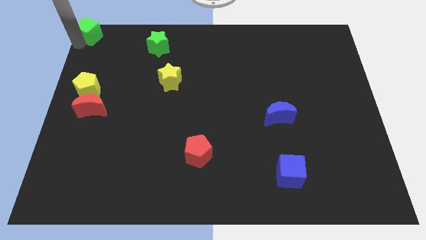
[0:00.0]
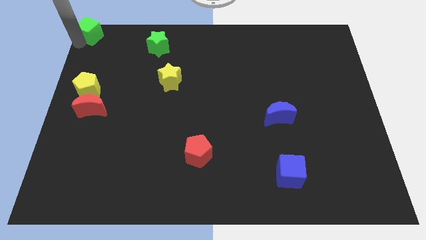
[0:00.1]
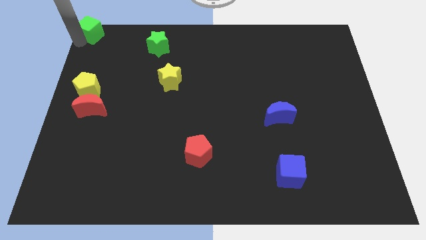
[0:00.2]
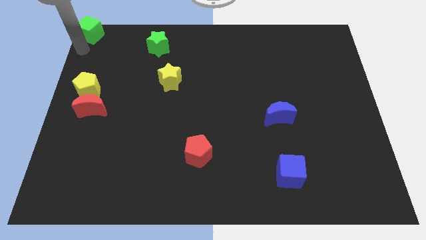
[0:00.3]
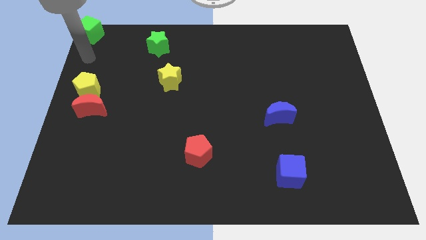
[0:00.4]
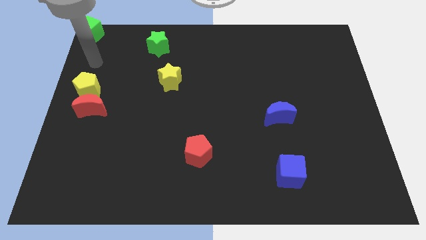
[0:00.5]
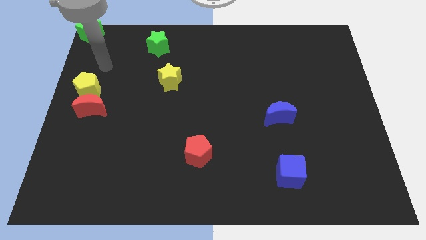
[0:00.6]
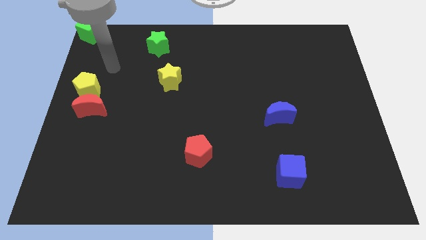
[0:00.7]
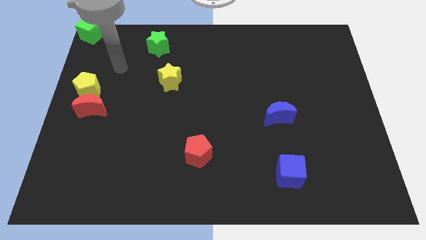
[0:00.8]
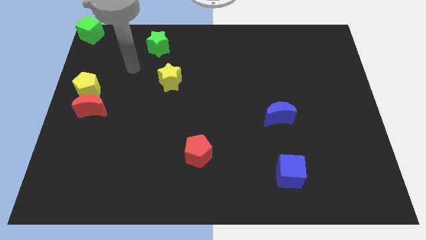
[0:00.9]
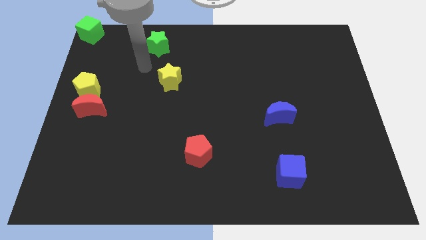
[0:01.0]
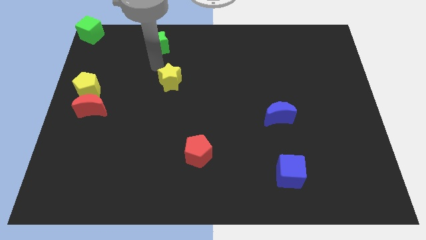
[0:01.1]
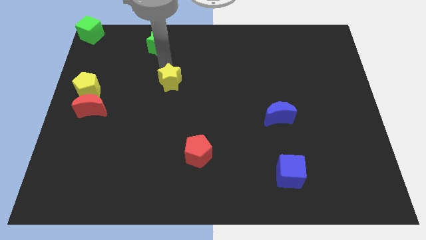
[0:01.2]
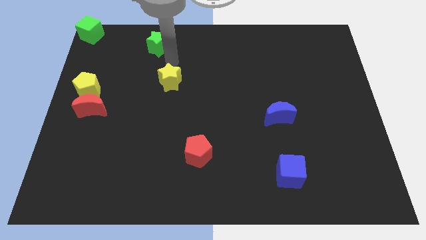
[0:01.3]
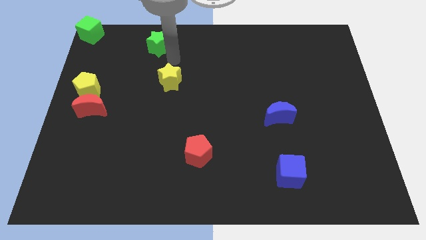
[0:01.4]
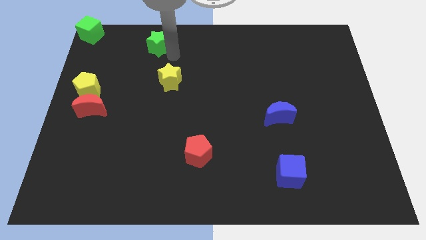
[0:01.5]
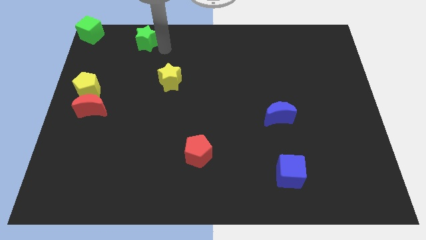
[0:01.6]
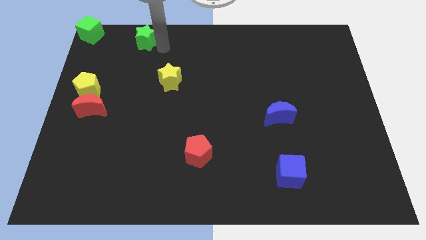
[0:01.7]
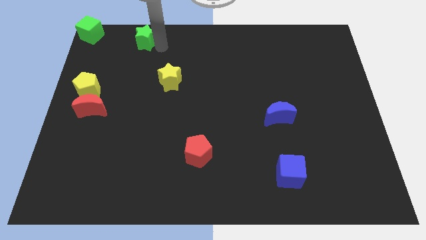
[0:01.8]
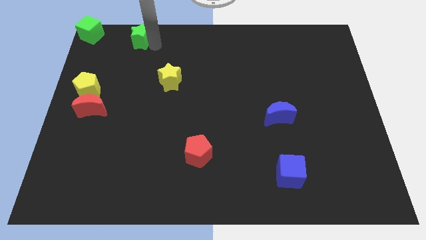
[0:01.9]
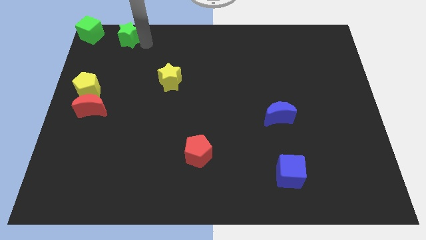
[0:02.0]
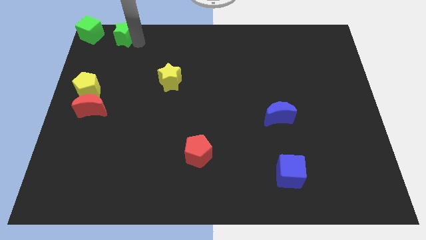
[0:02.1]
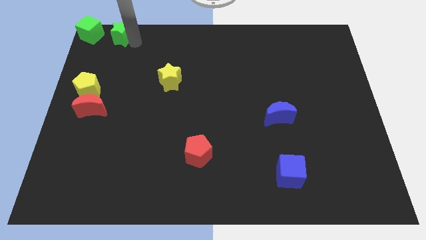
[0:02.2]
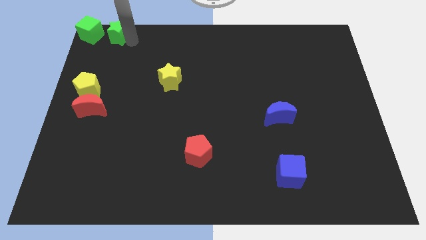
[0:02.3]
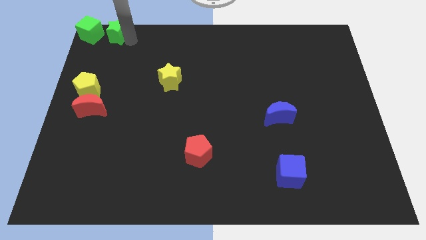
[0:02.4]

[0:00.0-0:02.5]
move the green star towards the green cube

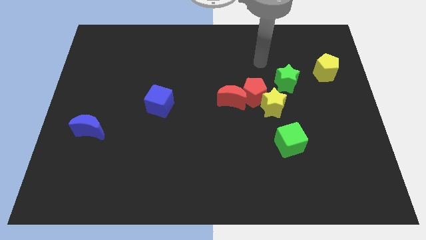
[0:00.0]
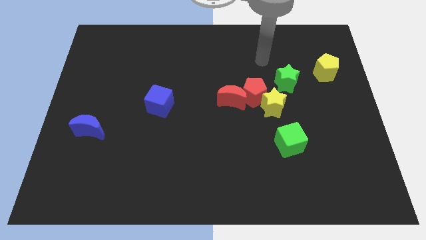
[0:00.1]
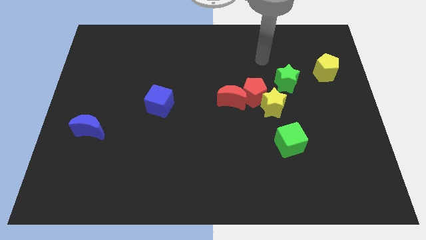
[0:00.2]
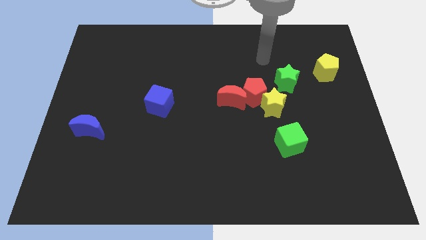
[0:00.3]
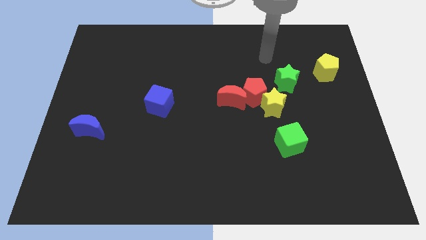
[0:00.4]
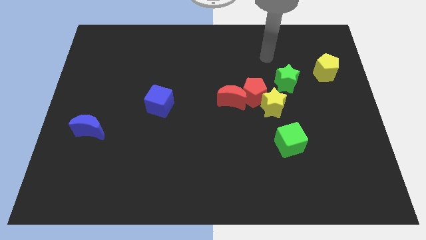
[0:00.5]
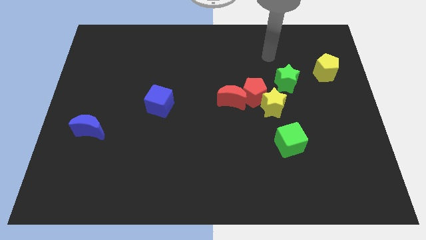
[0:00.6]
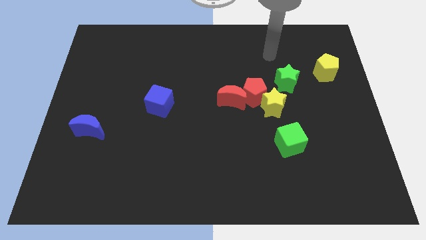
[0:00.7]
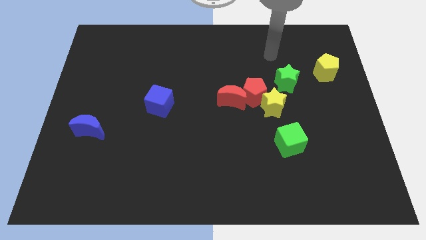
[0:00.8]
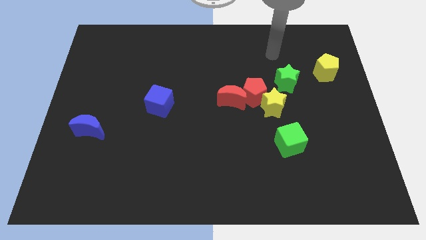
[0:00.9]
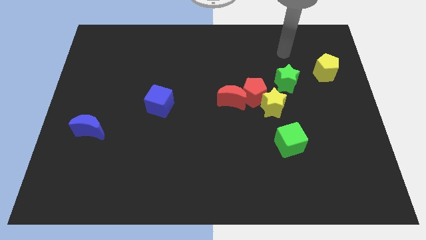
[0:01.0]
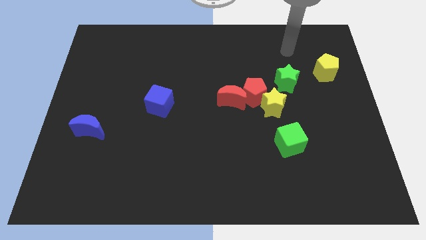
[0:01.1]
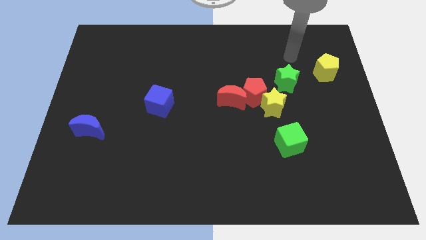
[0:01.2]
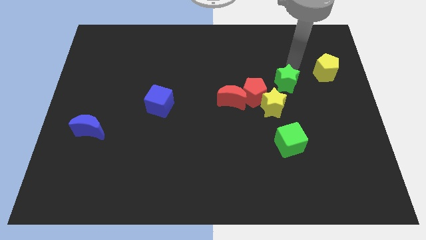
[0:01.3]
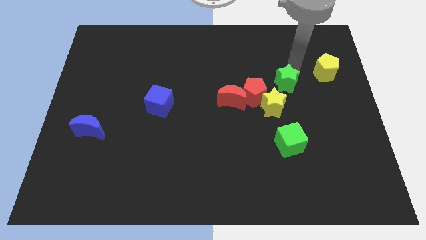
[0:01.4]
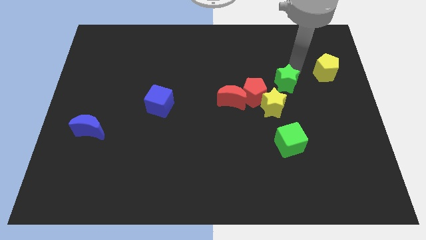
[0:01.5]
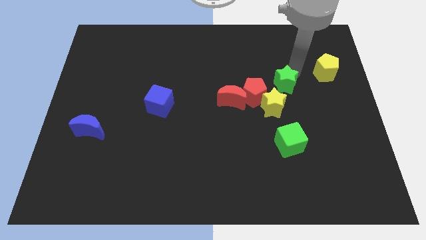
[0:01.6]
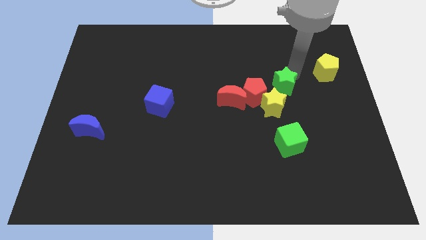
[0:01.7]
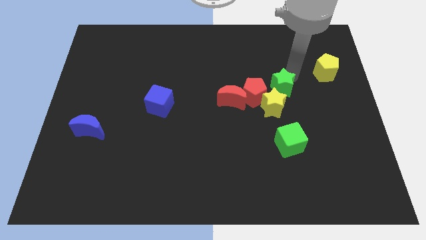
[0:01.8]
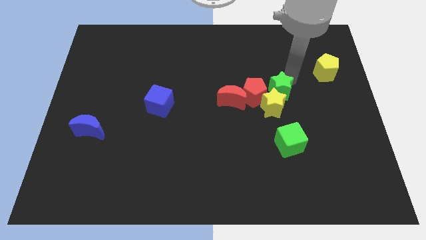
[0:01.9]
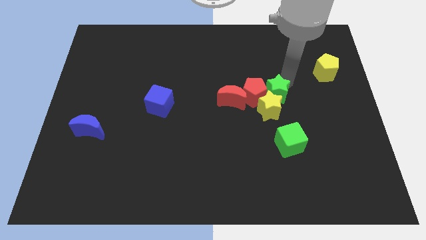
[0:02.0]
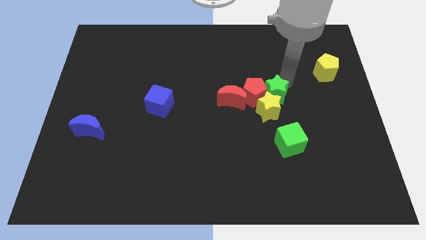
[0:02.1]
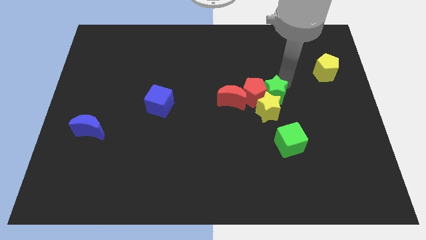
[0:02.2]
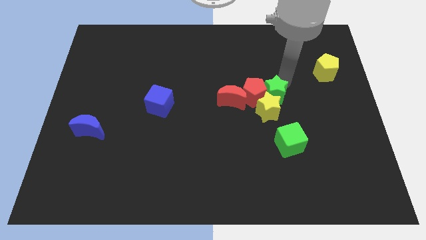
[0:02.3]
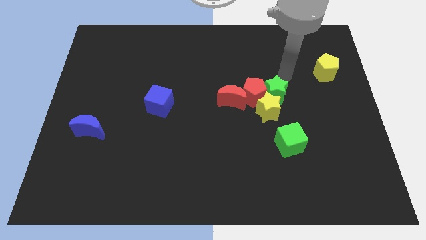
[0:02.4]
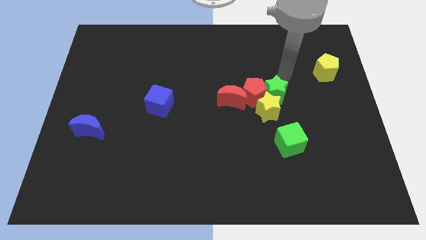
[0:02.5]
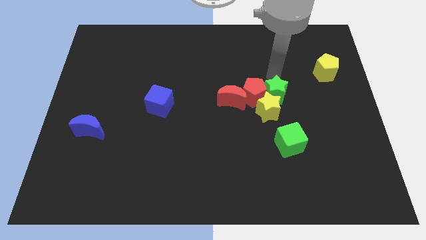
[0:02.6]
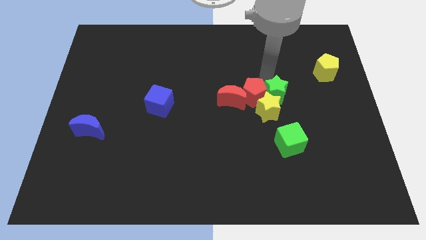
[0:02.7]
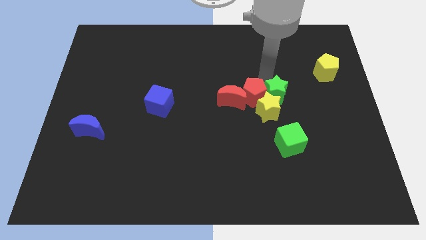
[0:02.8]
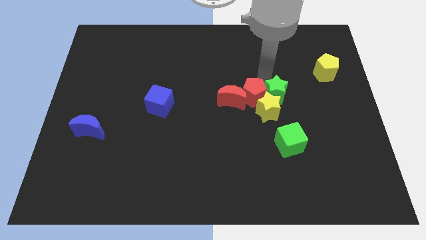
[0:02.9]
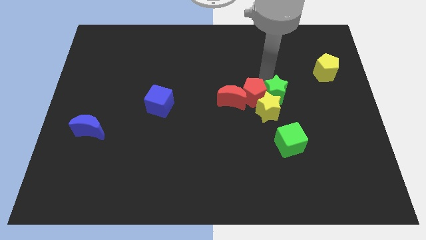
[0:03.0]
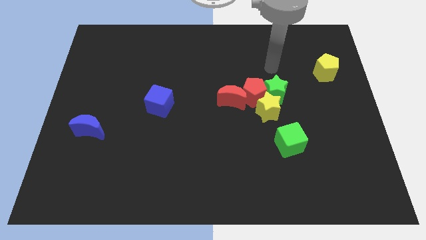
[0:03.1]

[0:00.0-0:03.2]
move the green star right beside the red pentagon

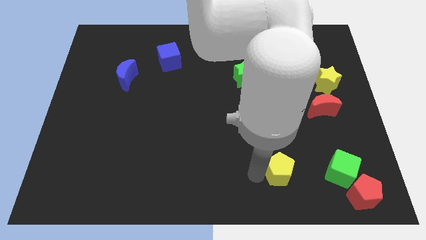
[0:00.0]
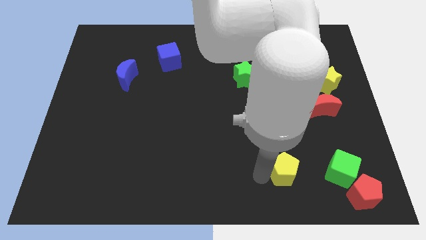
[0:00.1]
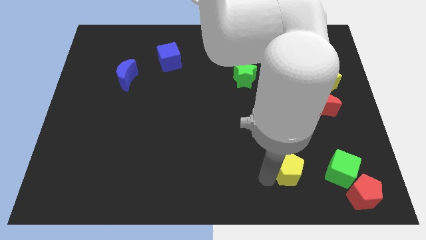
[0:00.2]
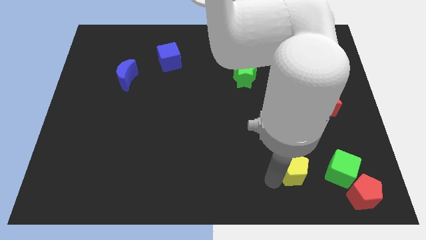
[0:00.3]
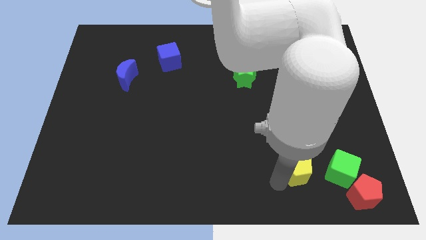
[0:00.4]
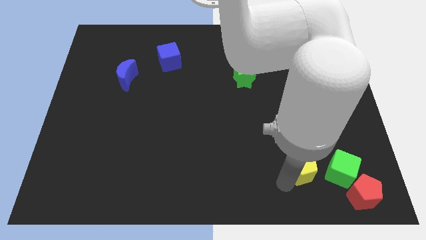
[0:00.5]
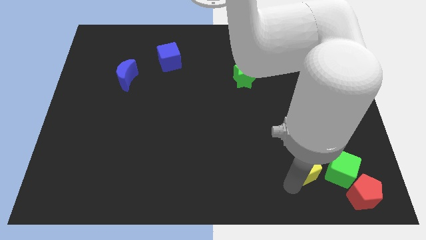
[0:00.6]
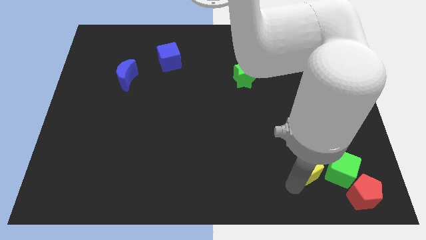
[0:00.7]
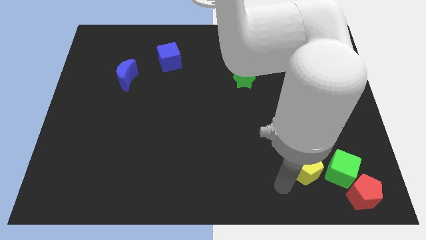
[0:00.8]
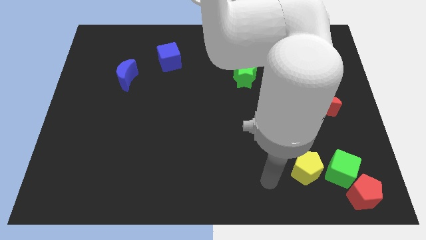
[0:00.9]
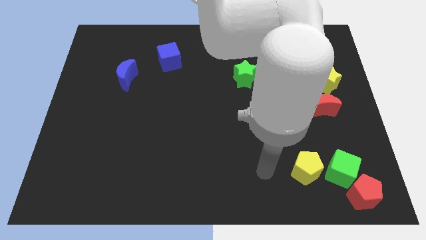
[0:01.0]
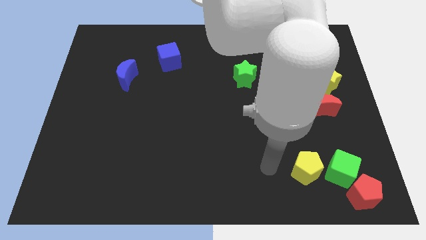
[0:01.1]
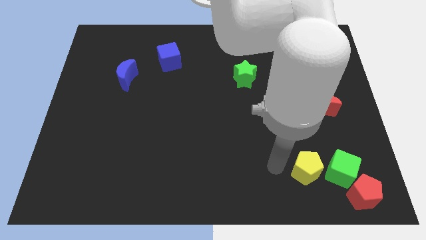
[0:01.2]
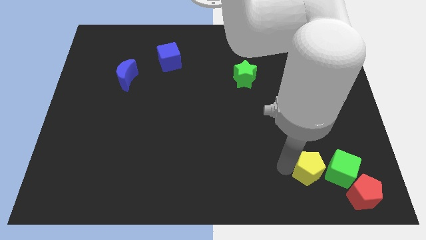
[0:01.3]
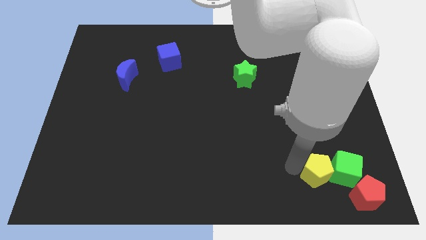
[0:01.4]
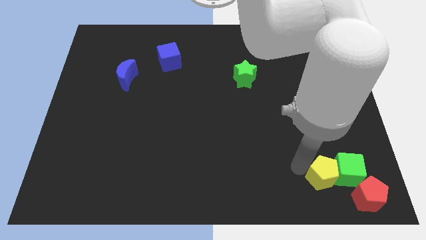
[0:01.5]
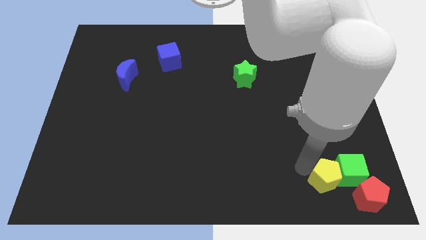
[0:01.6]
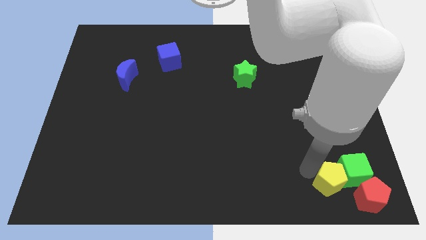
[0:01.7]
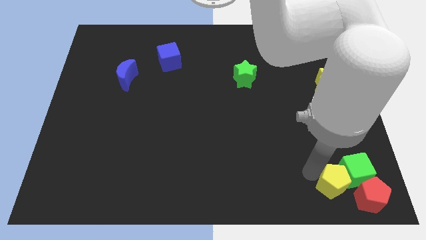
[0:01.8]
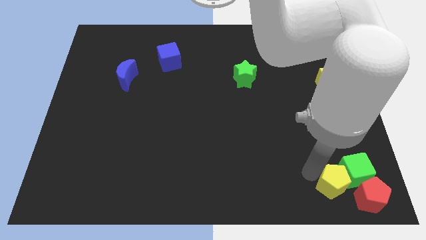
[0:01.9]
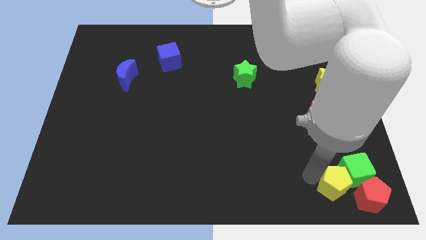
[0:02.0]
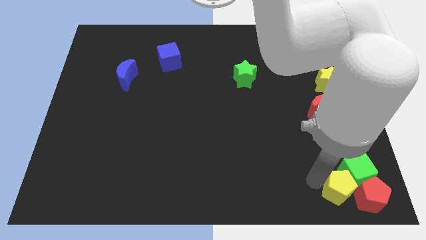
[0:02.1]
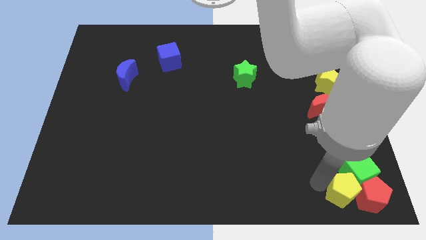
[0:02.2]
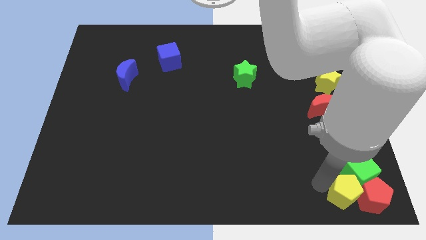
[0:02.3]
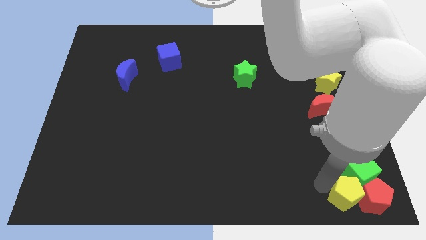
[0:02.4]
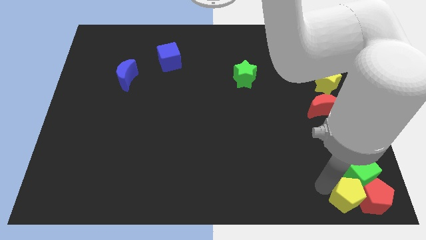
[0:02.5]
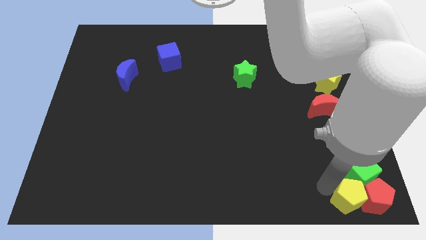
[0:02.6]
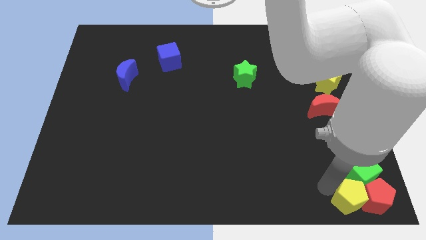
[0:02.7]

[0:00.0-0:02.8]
push yellow pentagon into the group of blocks

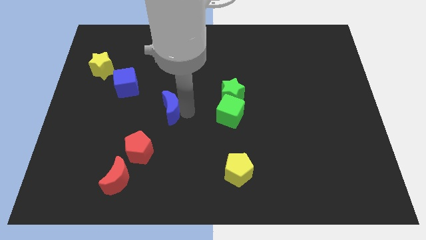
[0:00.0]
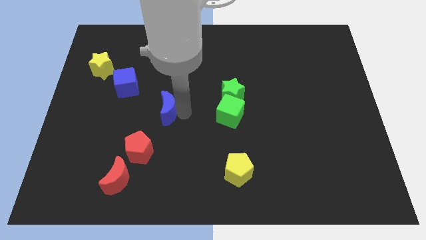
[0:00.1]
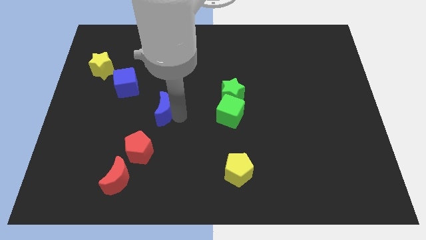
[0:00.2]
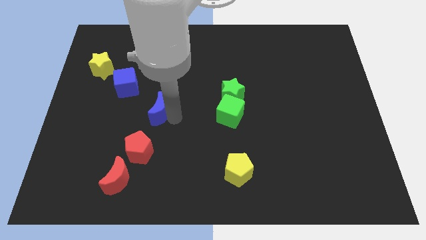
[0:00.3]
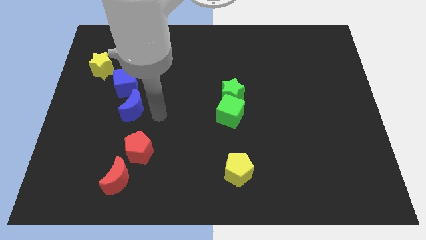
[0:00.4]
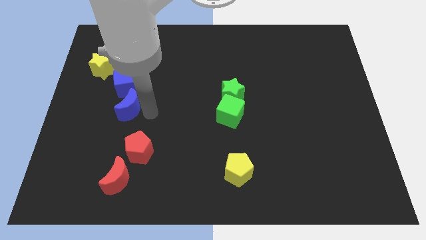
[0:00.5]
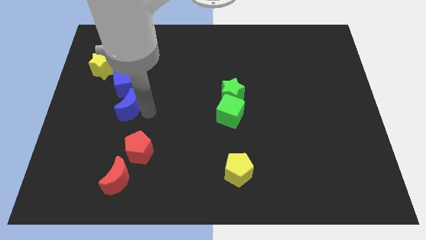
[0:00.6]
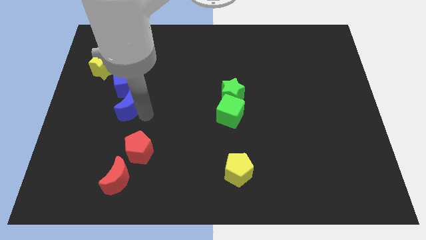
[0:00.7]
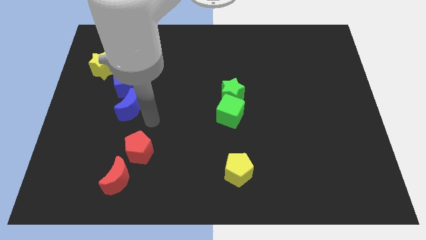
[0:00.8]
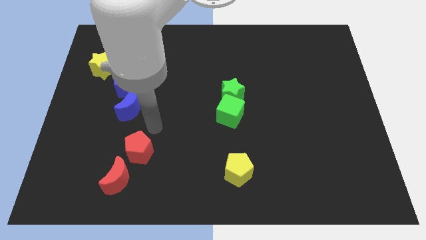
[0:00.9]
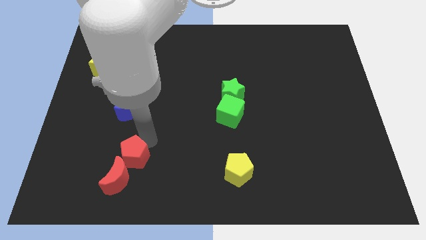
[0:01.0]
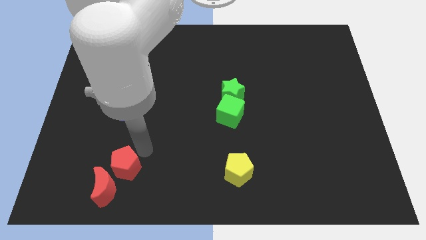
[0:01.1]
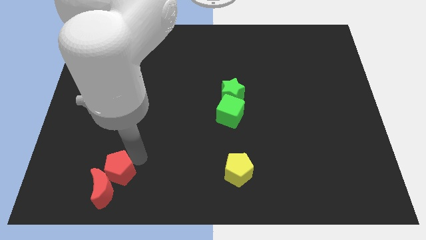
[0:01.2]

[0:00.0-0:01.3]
place the blue crescent down to the blue cube
